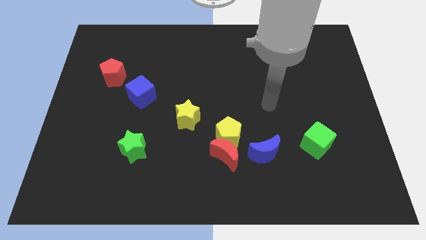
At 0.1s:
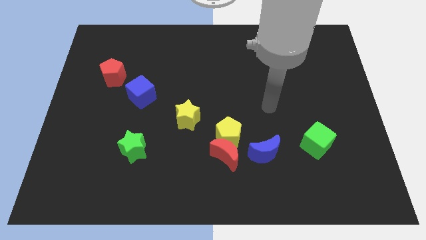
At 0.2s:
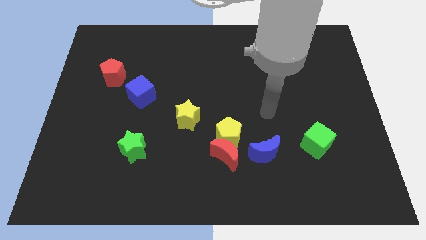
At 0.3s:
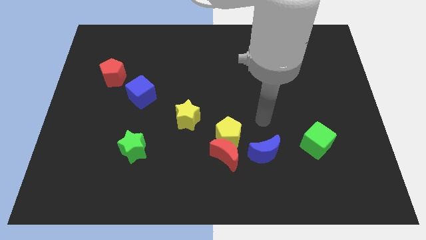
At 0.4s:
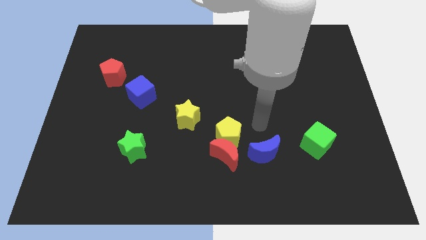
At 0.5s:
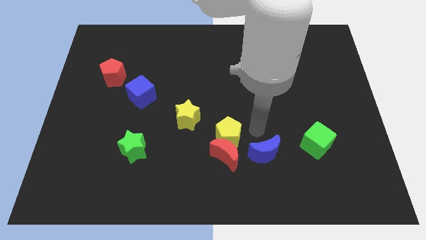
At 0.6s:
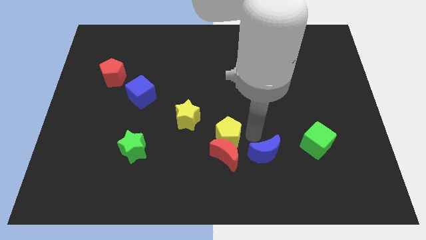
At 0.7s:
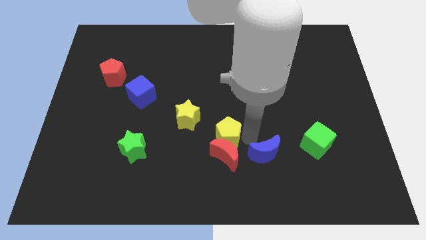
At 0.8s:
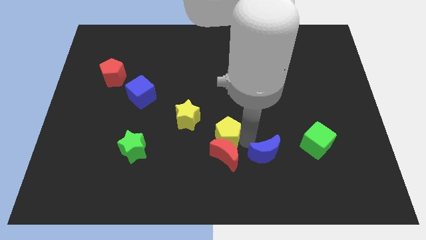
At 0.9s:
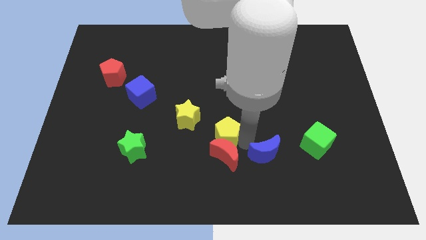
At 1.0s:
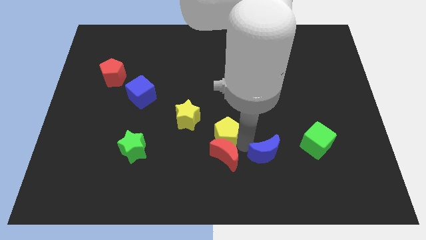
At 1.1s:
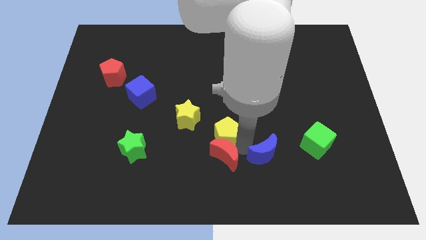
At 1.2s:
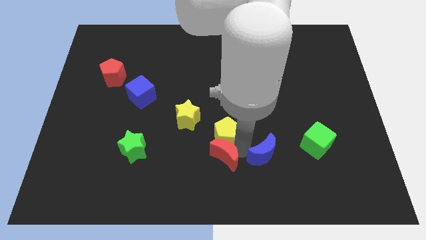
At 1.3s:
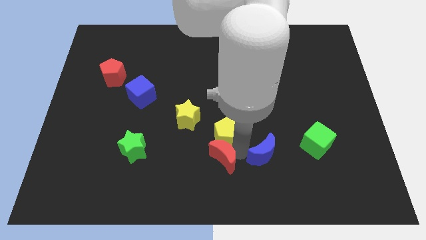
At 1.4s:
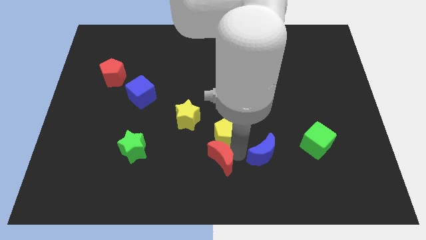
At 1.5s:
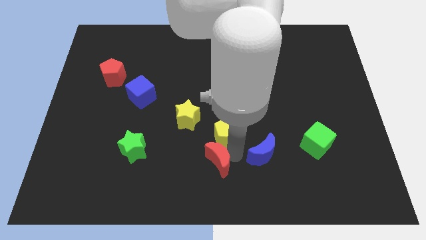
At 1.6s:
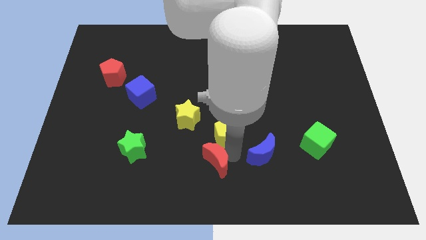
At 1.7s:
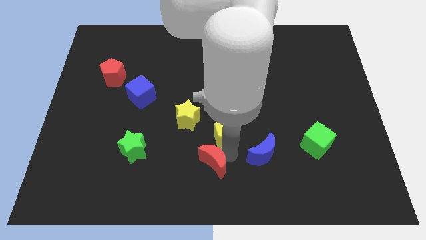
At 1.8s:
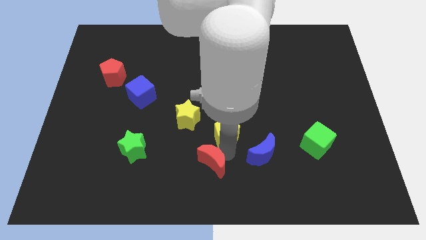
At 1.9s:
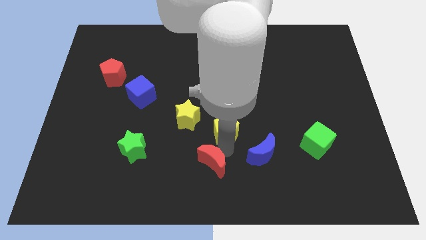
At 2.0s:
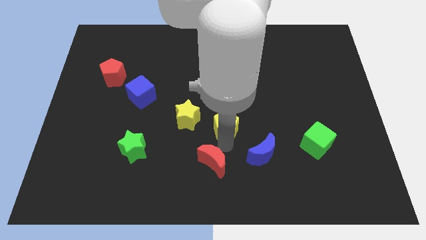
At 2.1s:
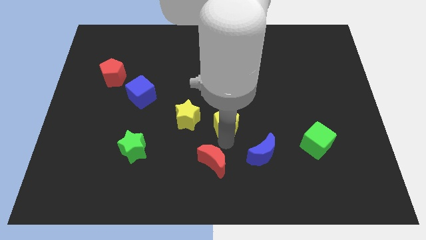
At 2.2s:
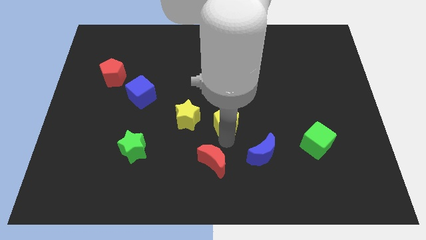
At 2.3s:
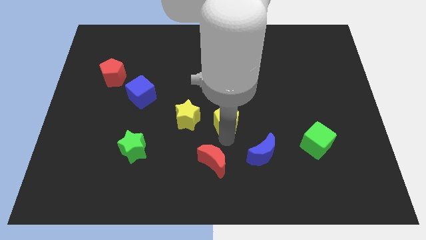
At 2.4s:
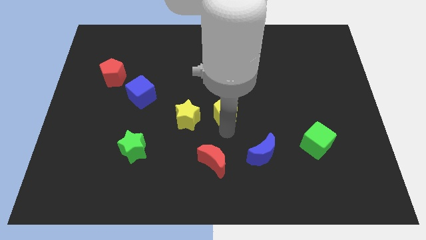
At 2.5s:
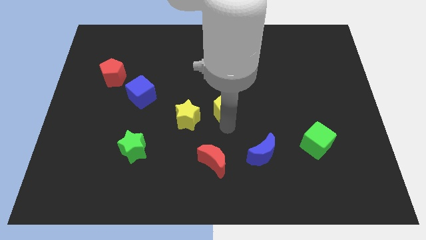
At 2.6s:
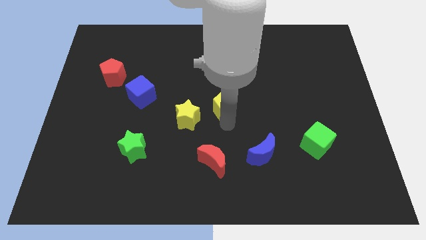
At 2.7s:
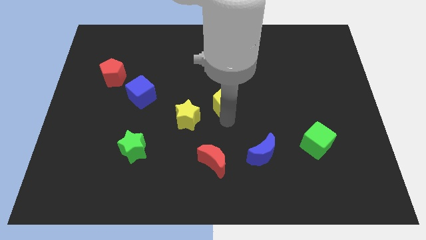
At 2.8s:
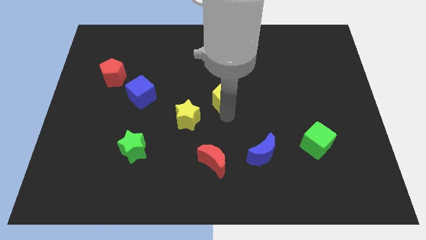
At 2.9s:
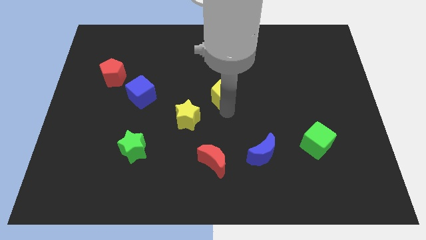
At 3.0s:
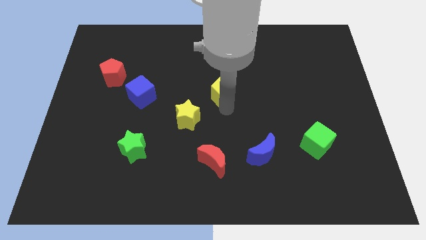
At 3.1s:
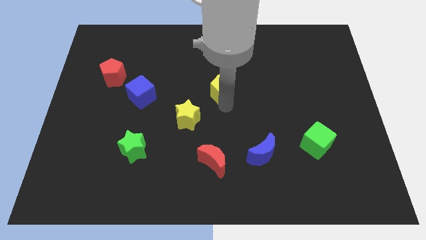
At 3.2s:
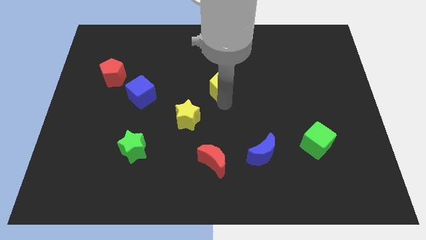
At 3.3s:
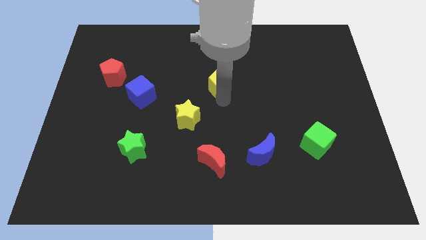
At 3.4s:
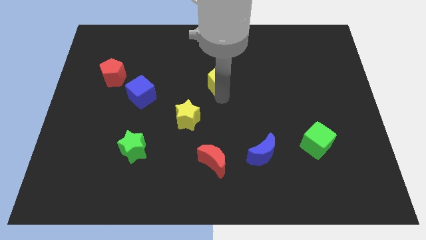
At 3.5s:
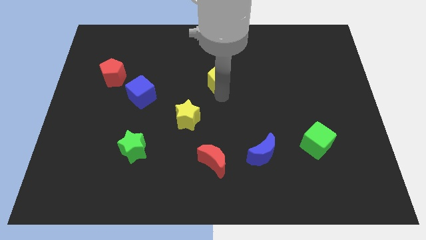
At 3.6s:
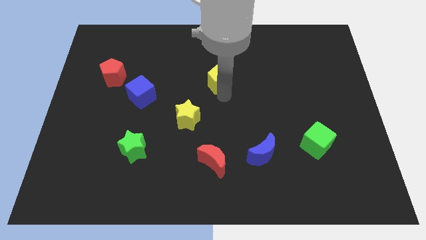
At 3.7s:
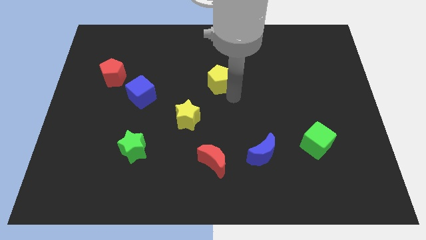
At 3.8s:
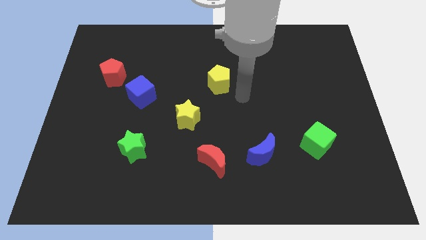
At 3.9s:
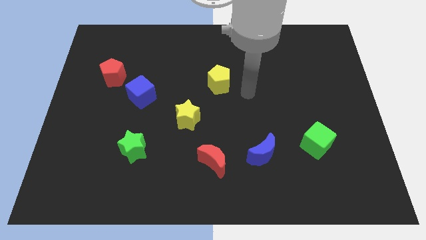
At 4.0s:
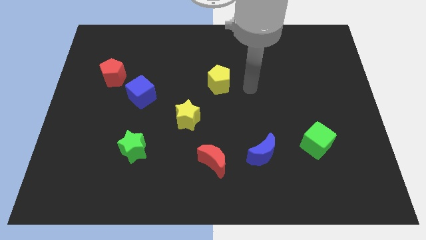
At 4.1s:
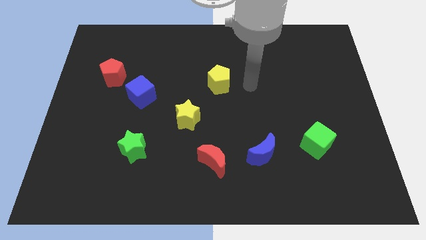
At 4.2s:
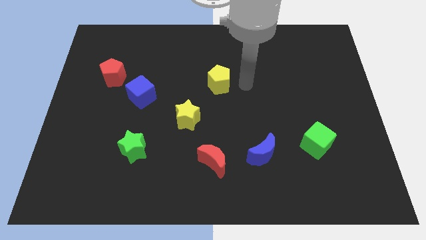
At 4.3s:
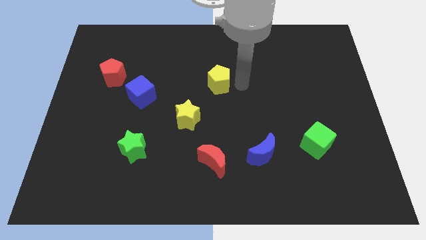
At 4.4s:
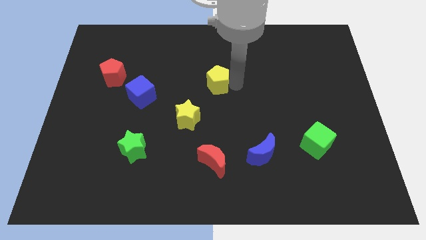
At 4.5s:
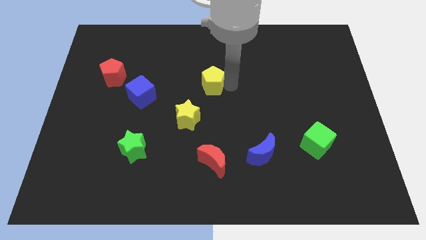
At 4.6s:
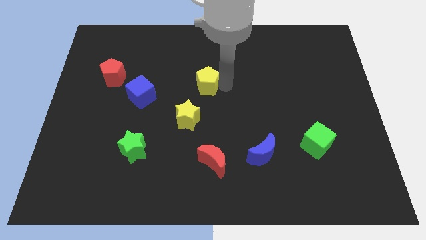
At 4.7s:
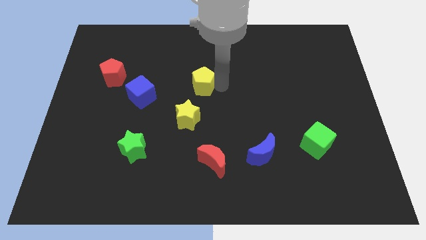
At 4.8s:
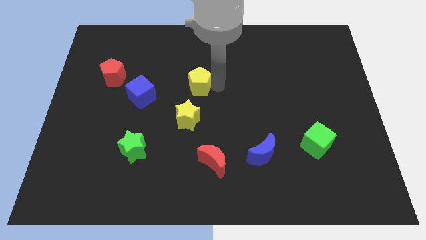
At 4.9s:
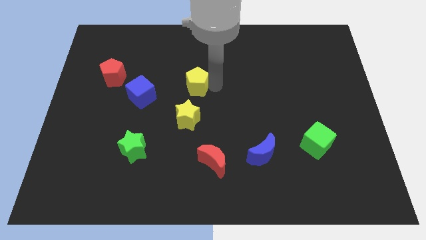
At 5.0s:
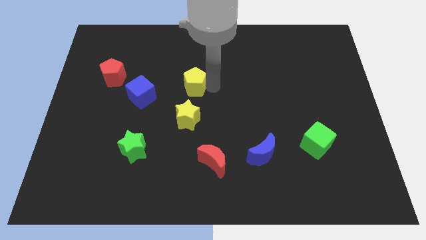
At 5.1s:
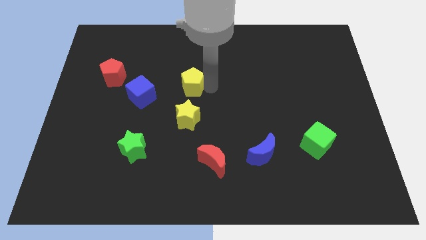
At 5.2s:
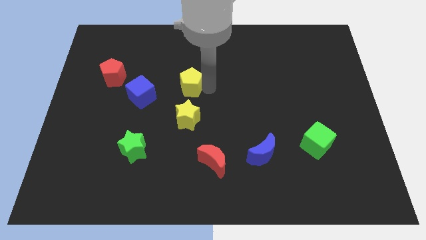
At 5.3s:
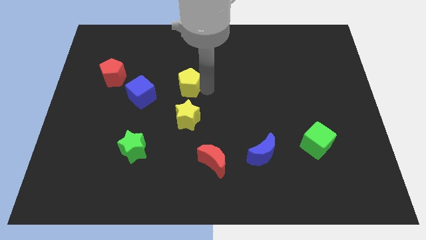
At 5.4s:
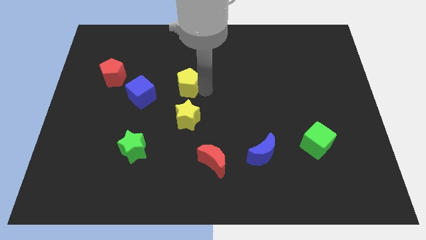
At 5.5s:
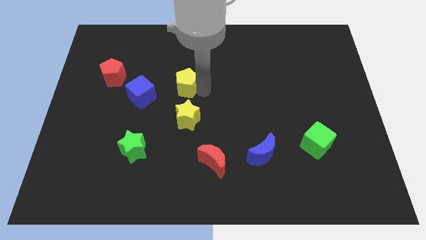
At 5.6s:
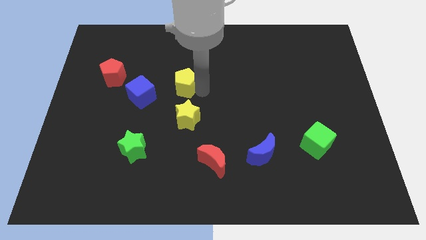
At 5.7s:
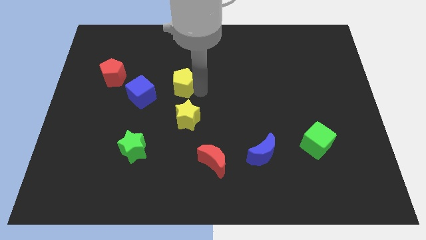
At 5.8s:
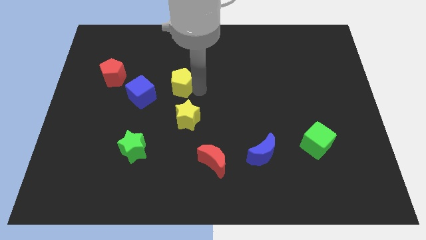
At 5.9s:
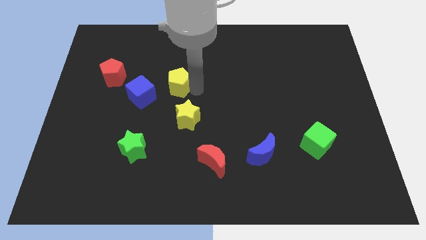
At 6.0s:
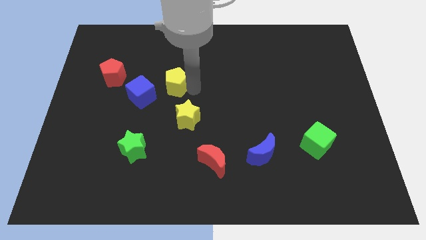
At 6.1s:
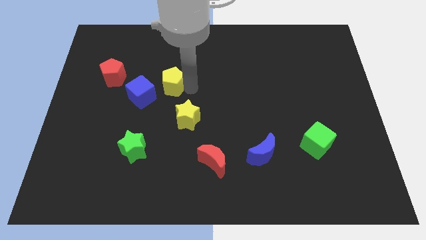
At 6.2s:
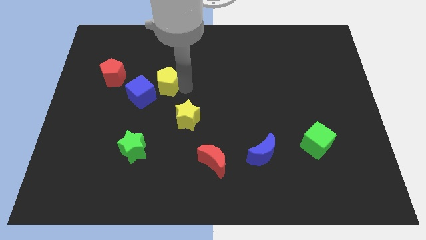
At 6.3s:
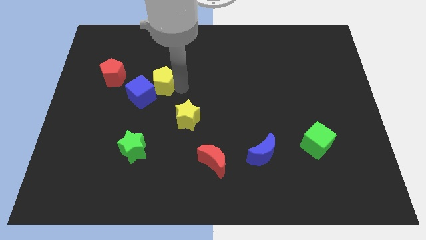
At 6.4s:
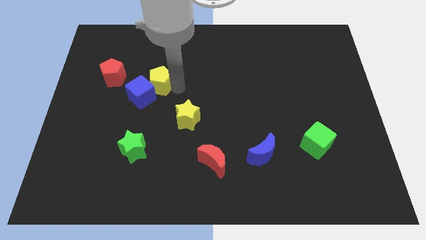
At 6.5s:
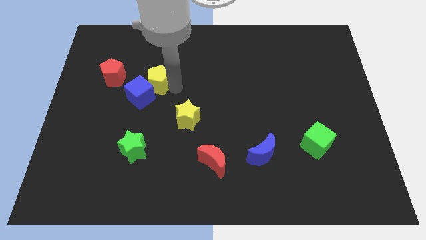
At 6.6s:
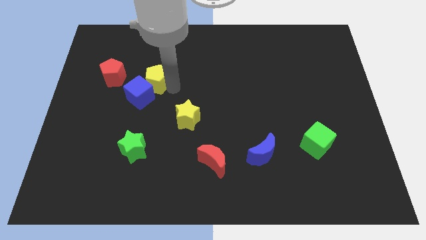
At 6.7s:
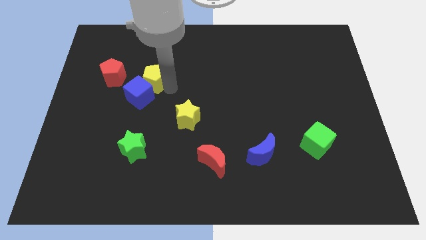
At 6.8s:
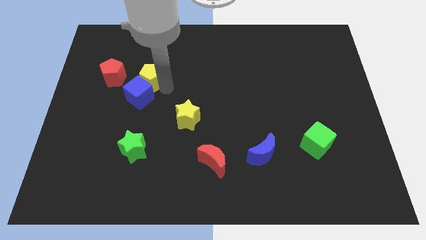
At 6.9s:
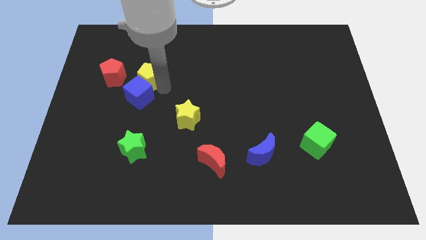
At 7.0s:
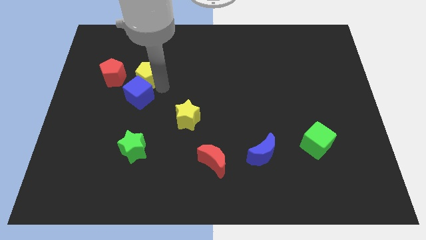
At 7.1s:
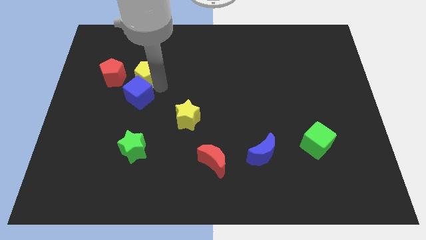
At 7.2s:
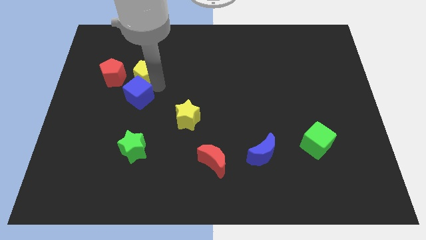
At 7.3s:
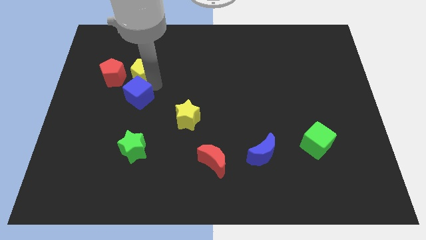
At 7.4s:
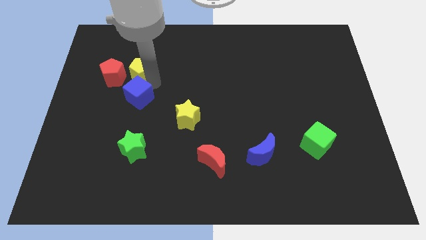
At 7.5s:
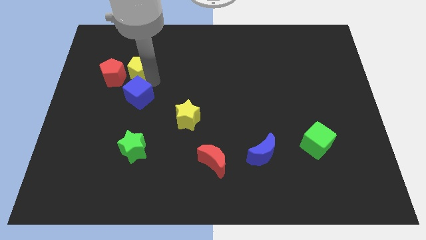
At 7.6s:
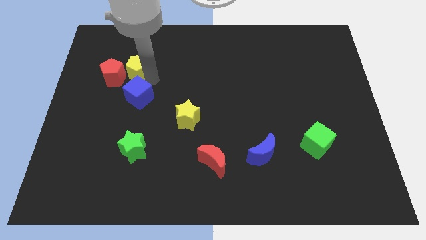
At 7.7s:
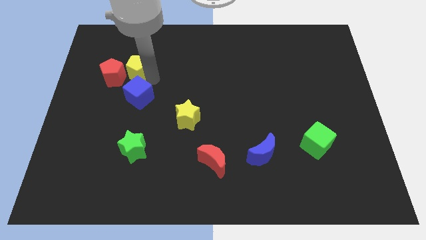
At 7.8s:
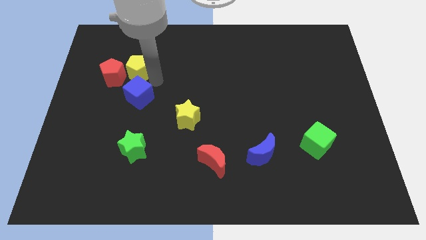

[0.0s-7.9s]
push the yellow pentagon to the red pentagon

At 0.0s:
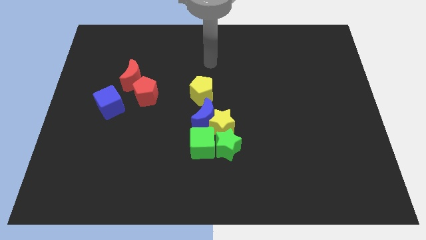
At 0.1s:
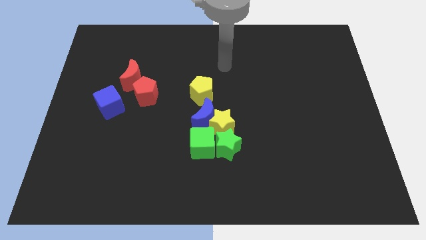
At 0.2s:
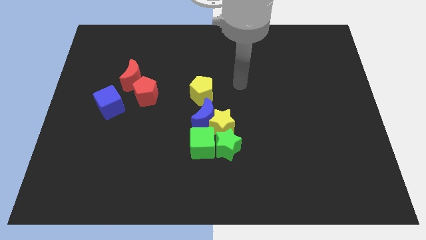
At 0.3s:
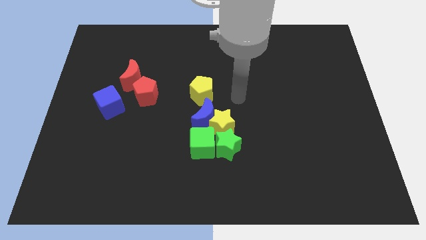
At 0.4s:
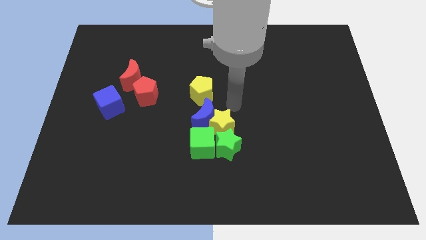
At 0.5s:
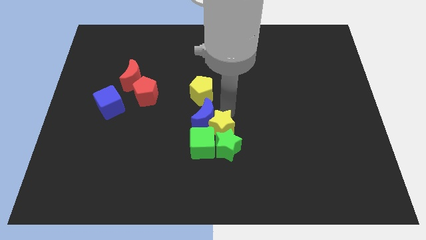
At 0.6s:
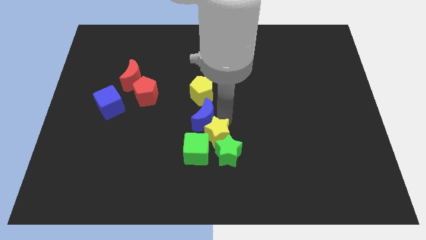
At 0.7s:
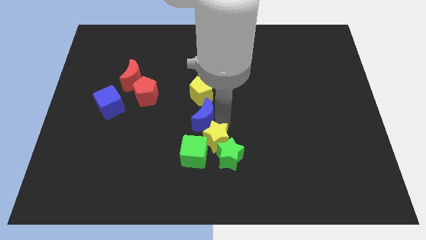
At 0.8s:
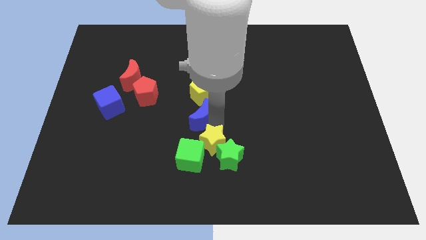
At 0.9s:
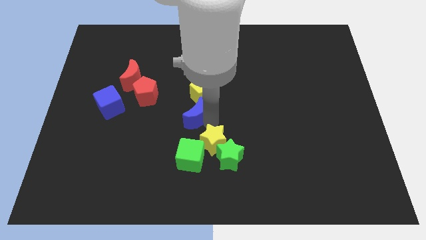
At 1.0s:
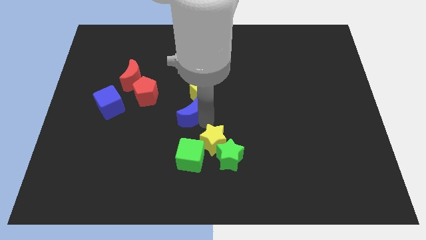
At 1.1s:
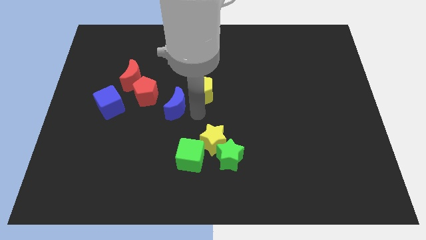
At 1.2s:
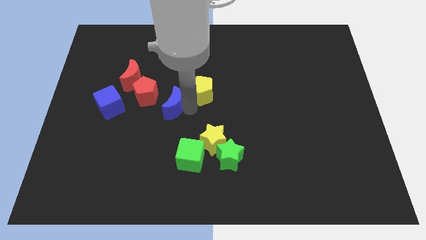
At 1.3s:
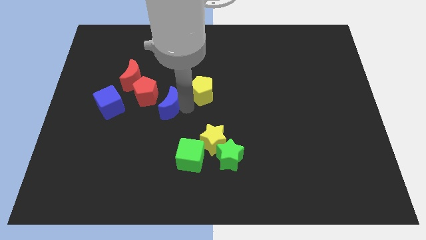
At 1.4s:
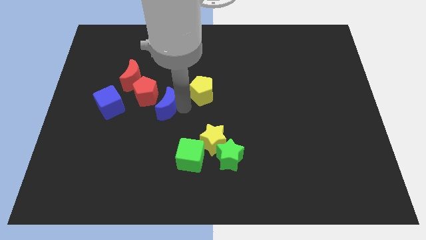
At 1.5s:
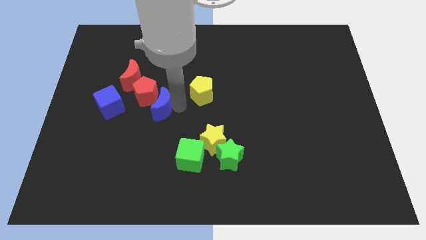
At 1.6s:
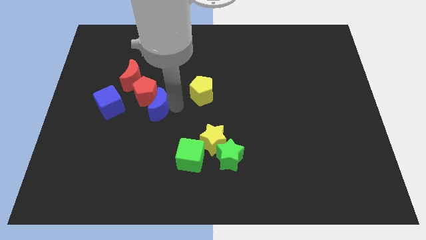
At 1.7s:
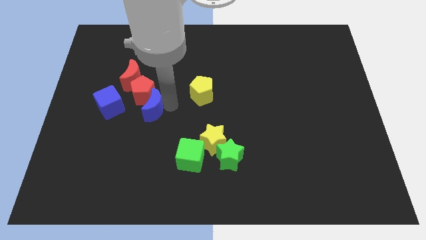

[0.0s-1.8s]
put the blue moon next to the red pentagon
